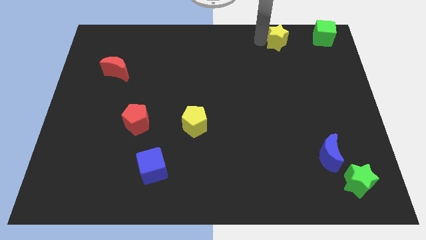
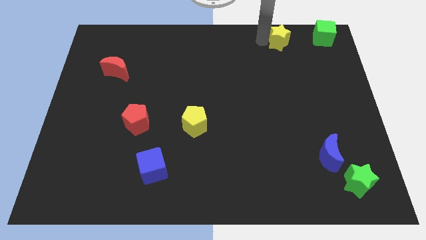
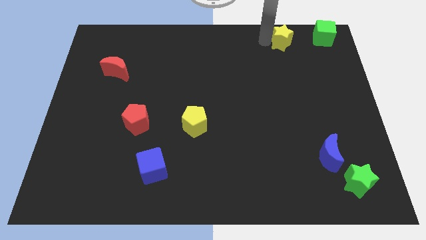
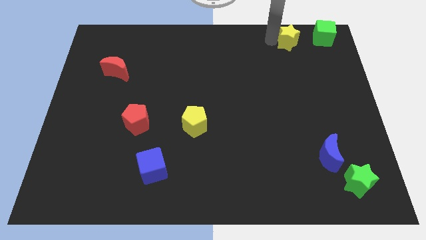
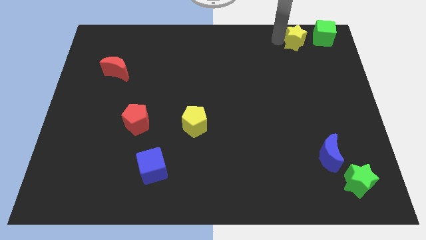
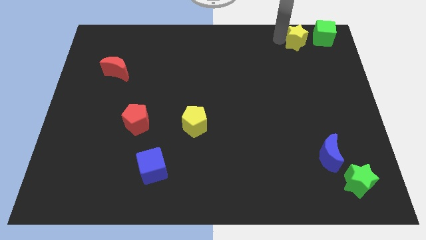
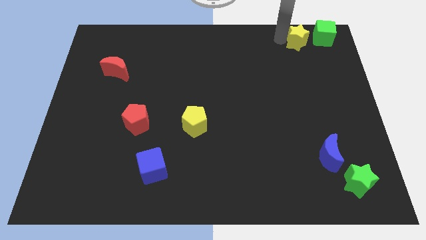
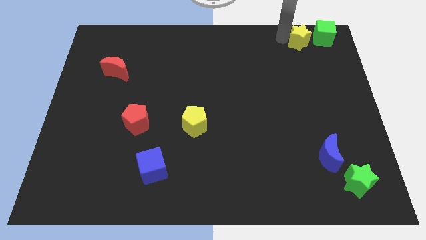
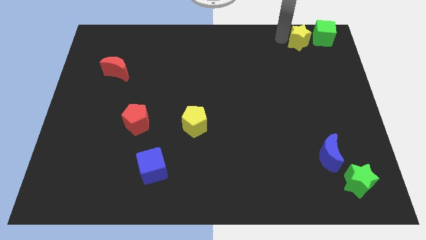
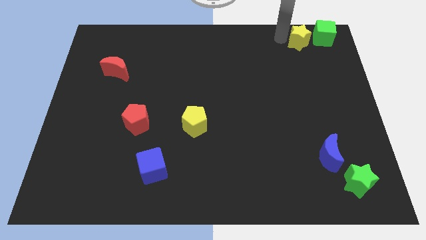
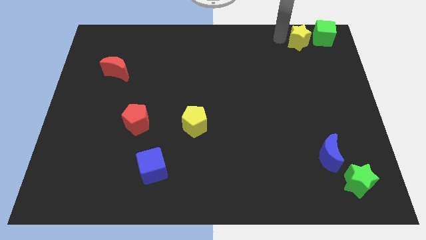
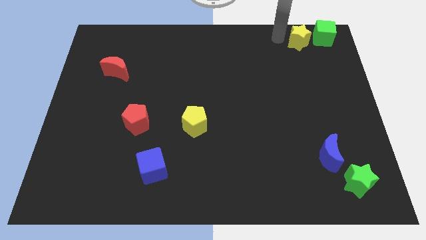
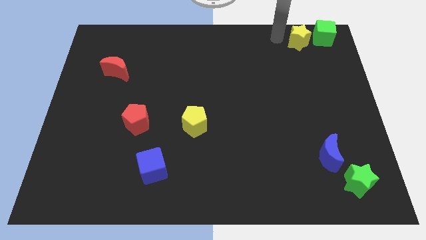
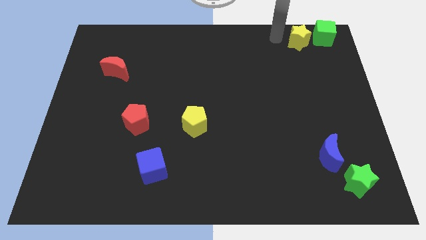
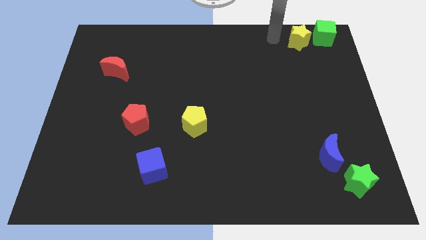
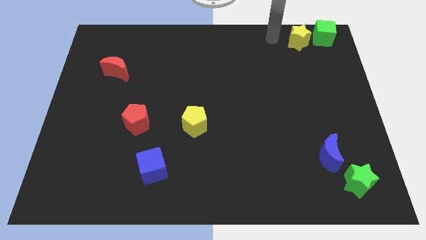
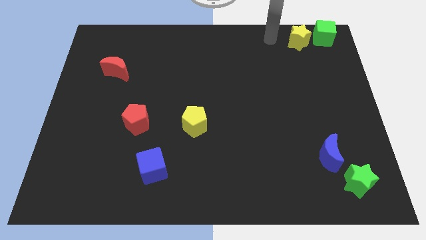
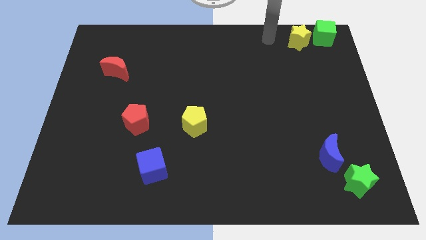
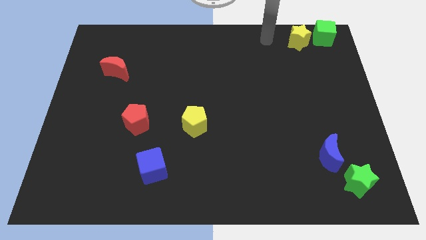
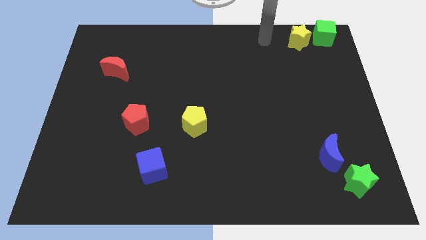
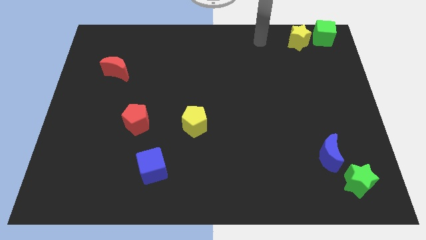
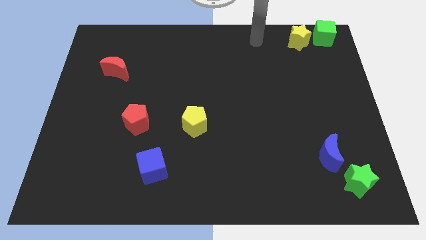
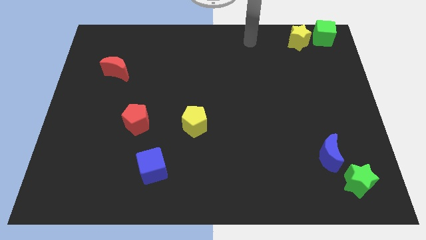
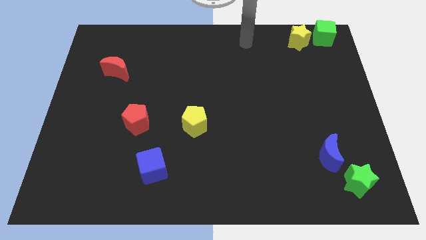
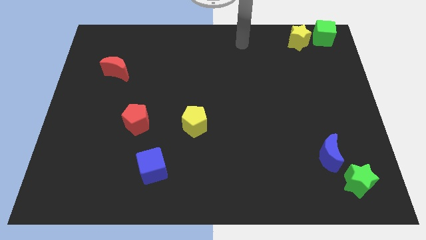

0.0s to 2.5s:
move star into green cube

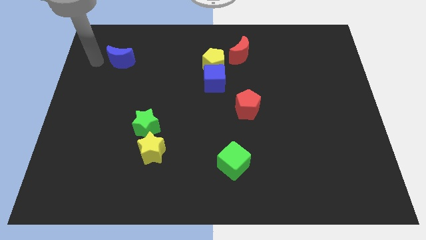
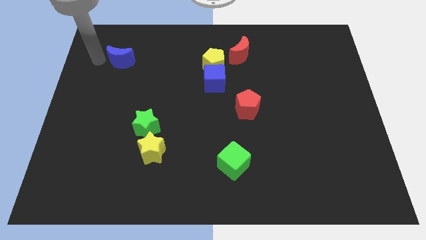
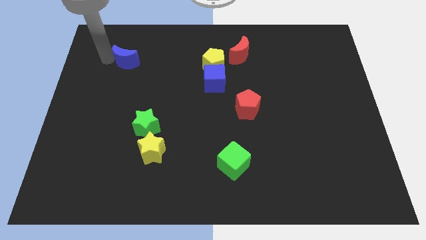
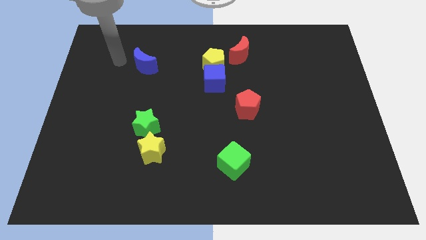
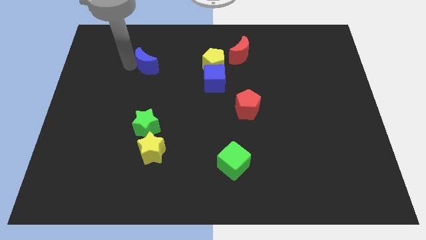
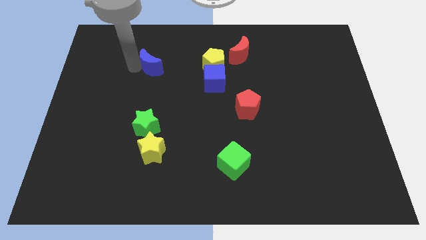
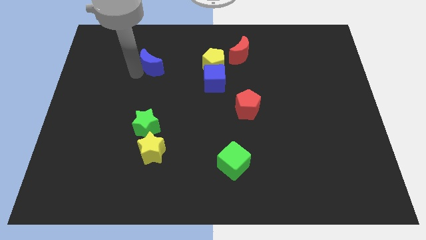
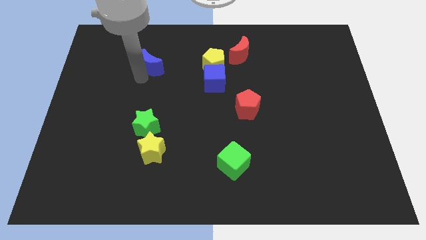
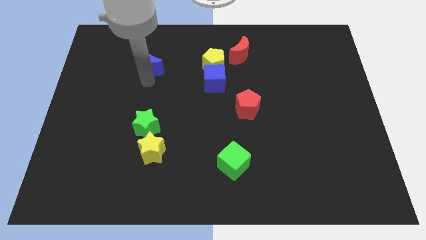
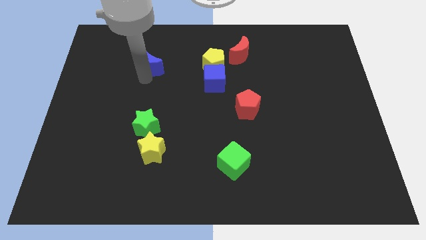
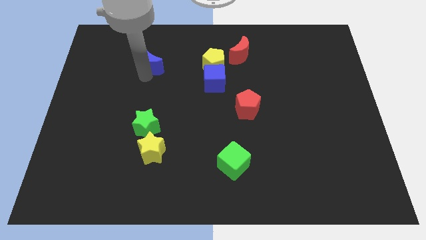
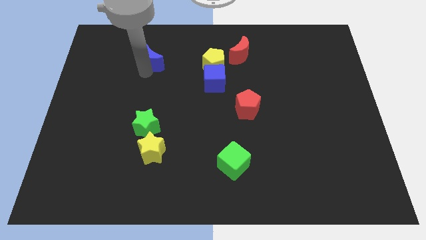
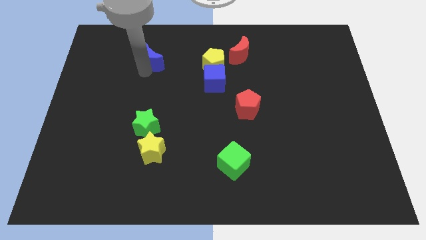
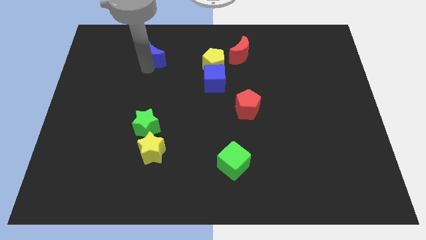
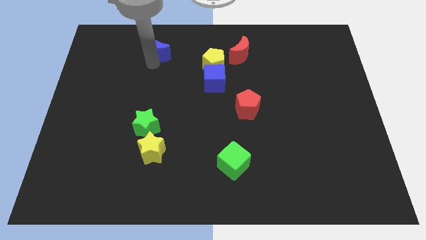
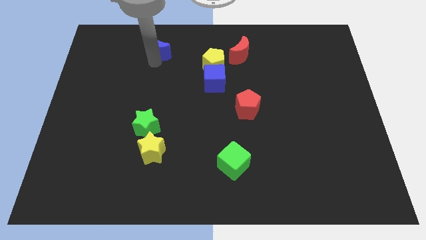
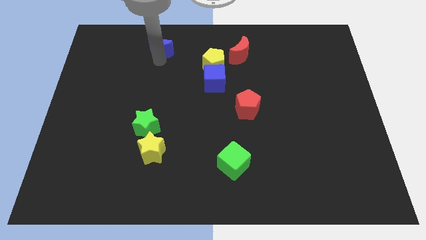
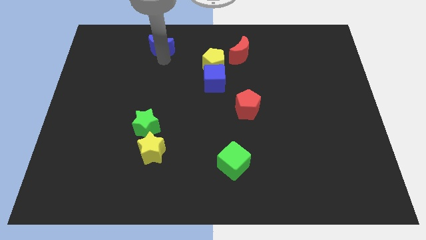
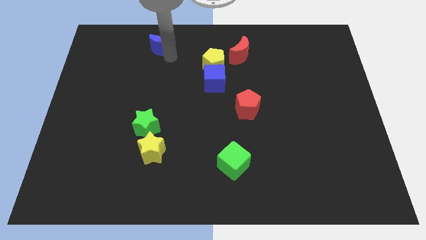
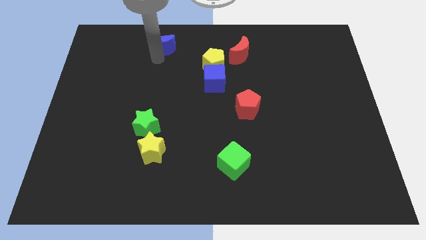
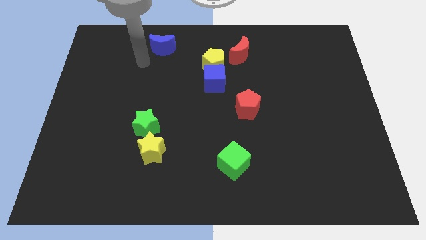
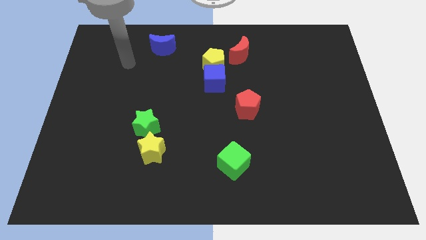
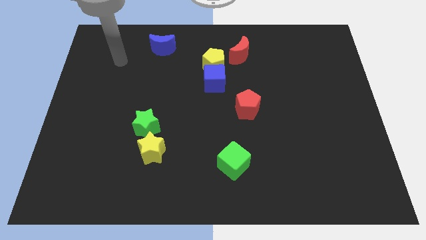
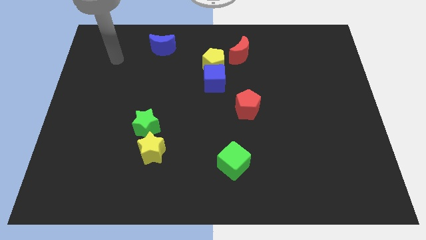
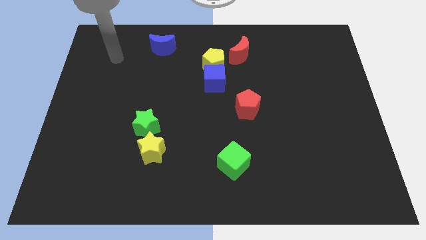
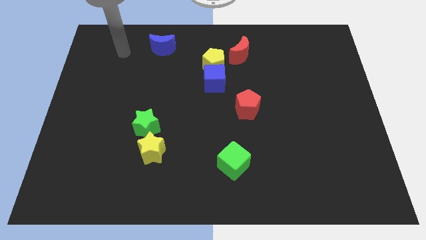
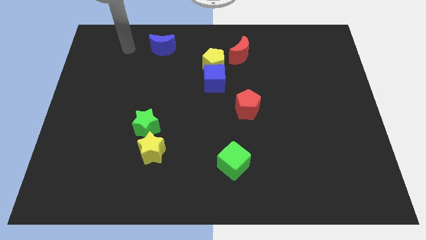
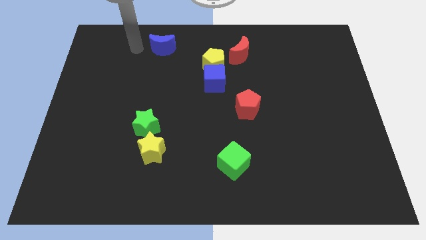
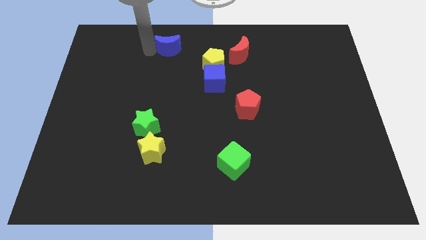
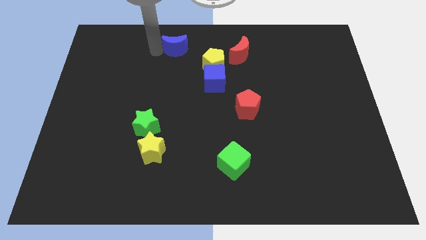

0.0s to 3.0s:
drag the blue moon to the top center

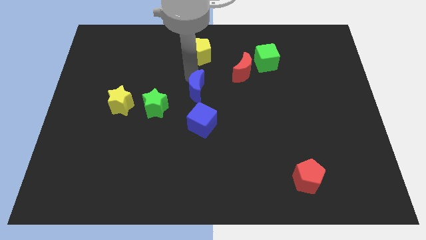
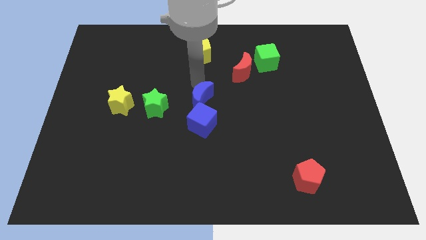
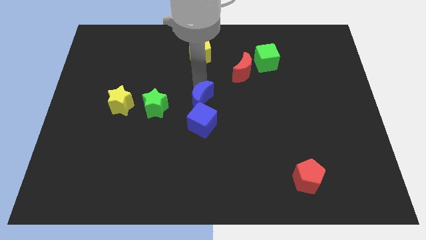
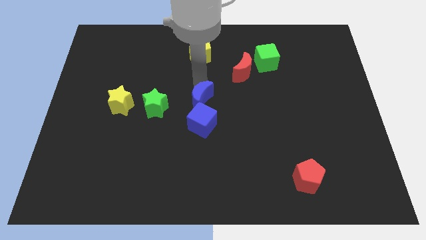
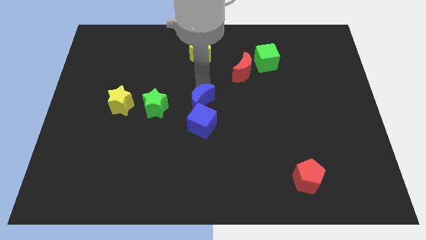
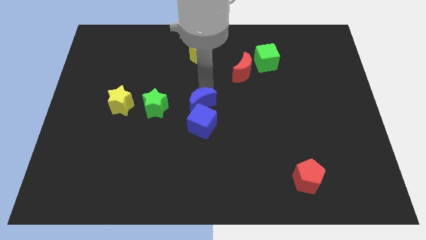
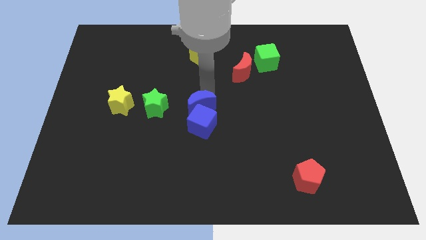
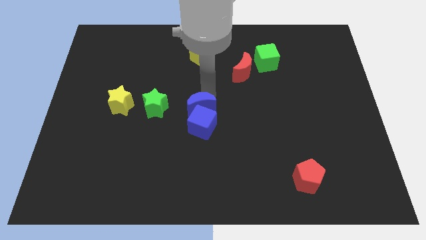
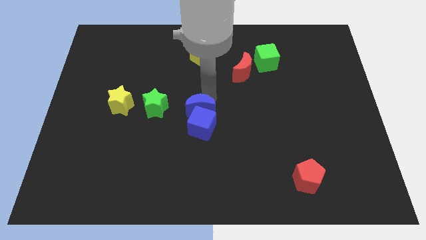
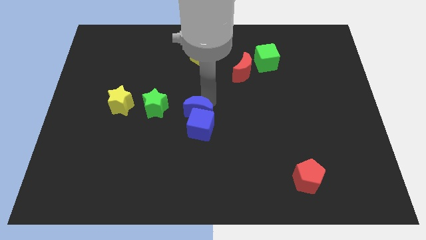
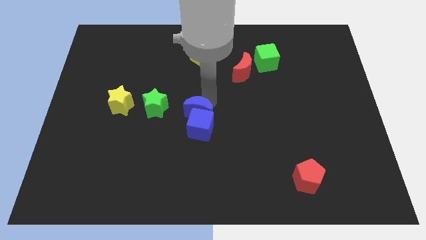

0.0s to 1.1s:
slightly push the blue crescent into the top side of the blue cube

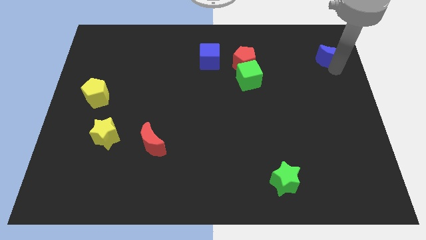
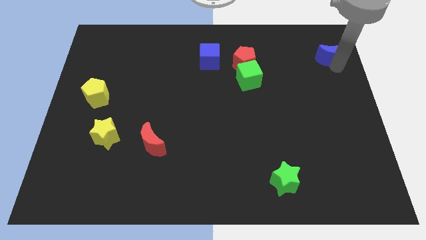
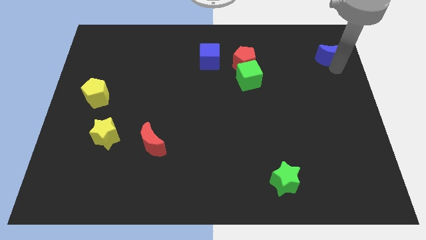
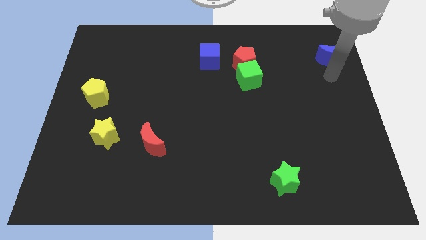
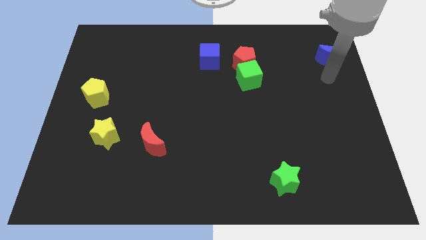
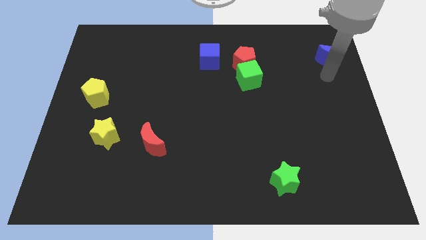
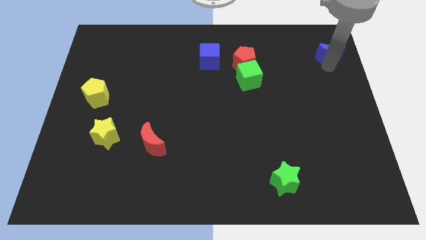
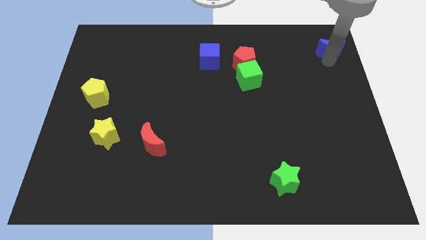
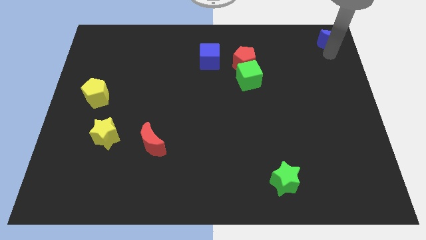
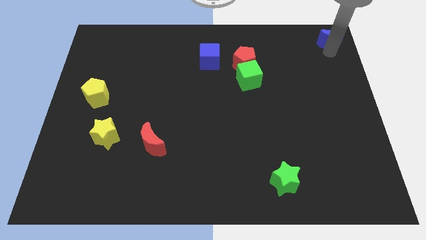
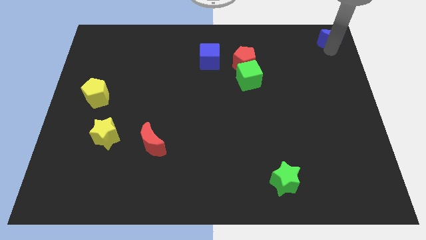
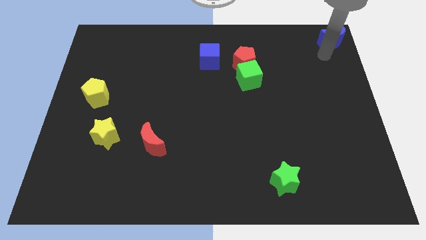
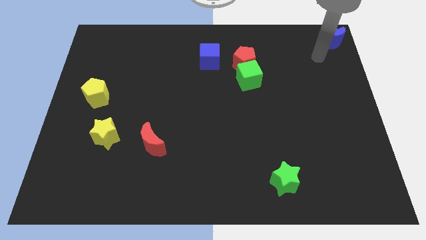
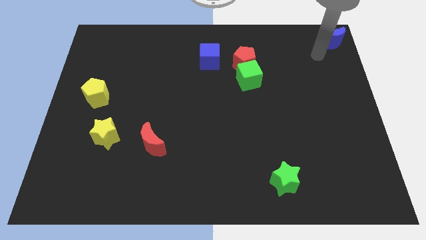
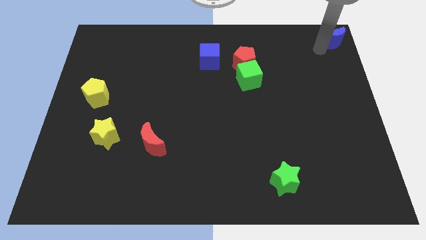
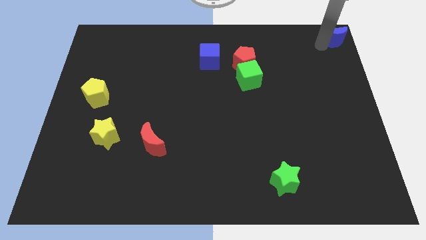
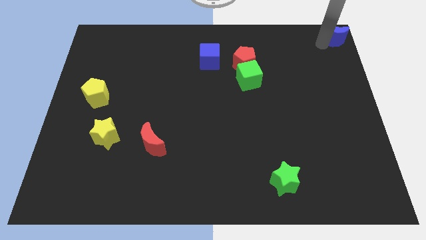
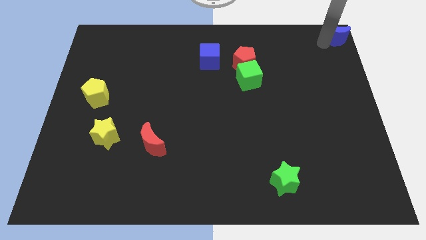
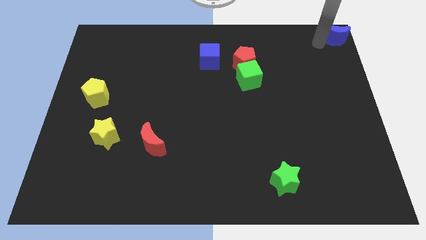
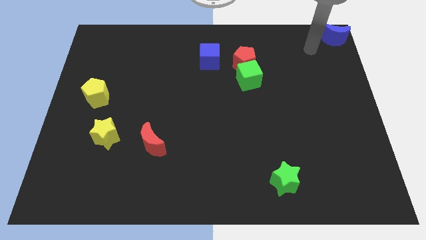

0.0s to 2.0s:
place the blue moon towards the top right corner of the board

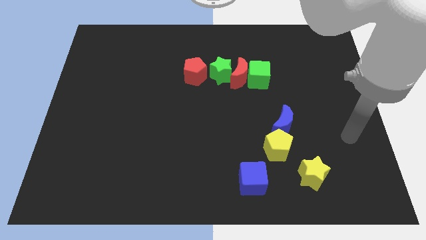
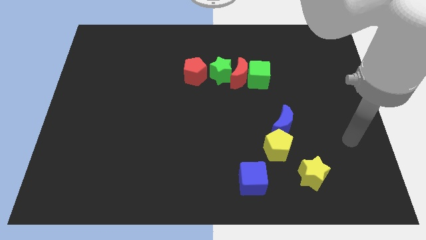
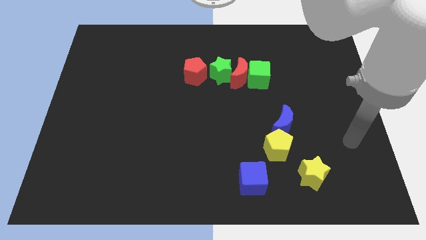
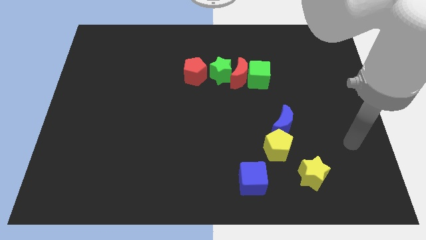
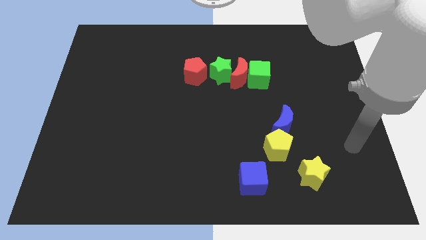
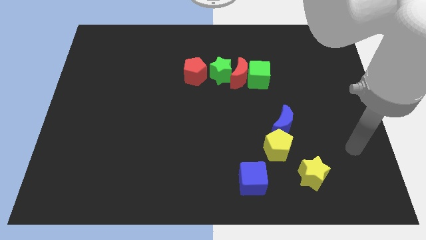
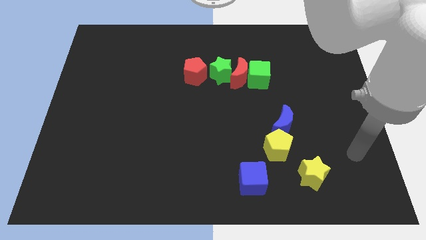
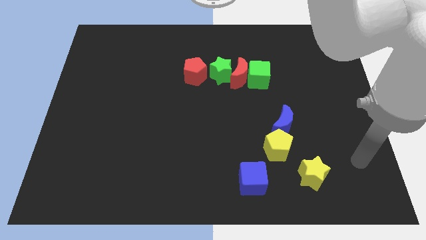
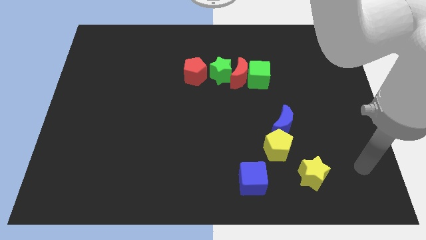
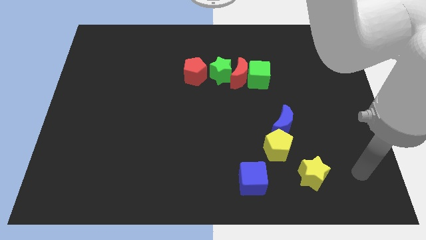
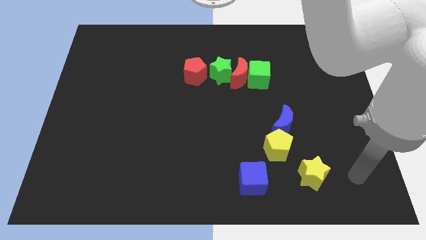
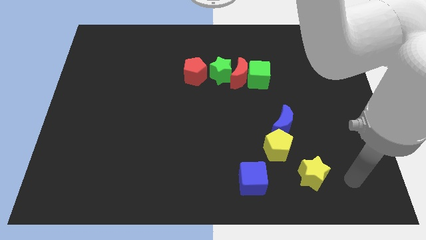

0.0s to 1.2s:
move the arm to the right side of the yellow star
